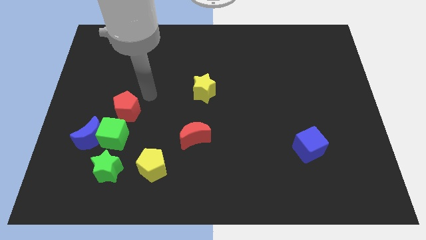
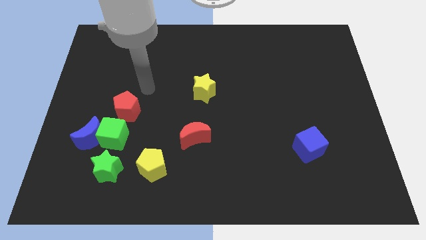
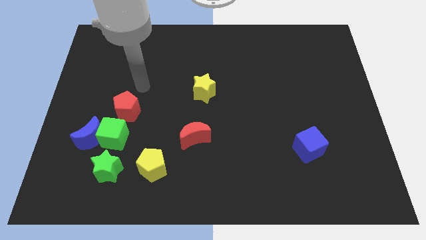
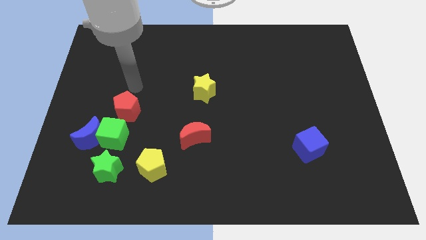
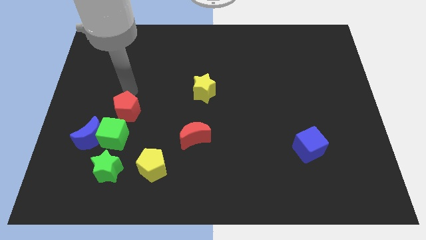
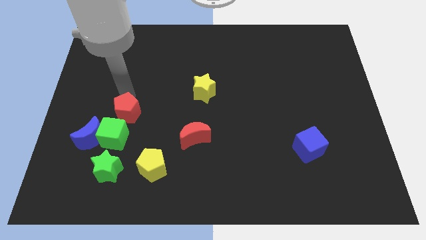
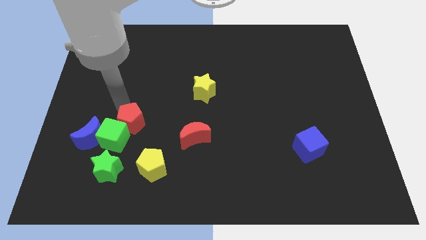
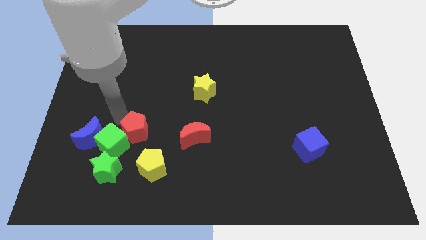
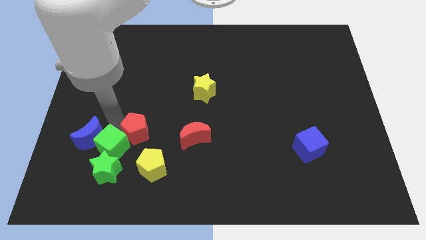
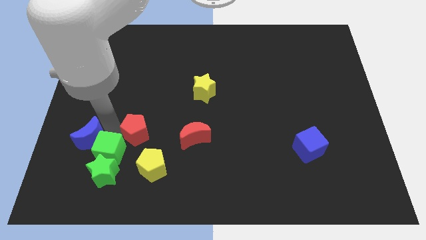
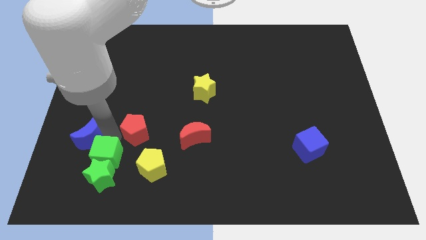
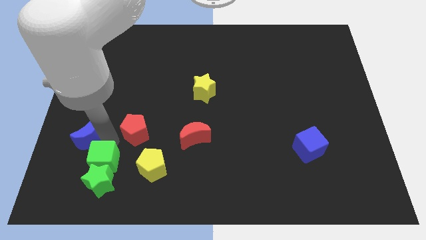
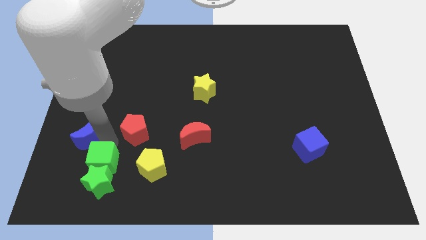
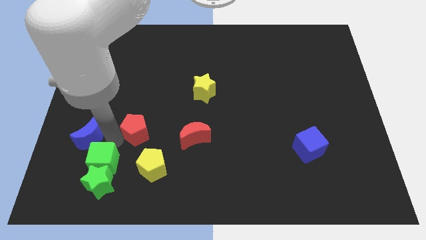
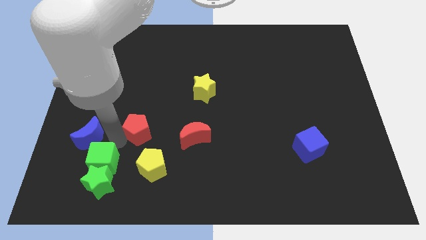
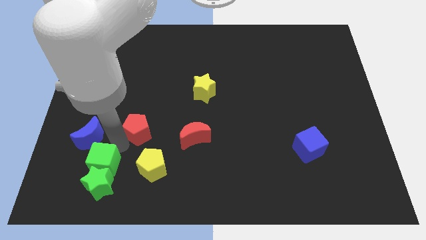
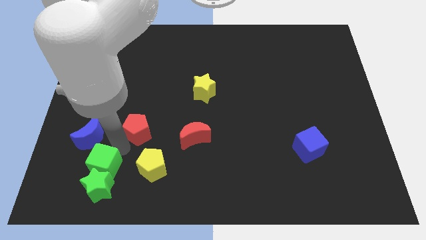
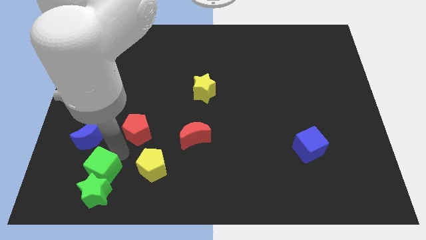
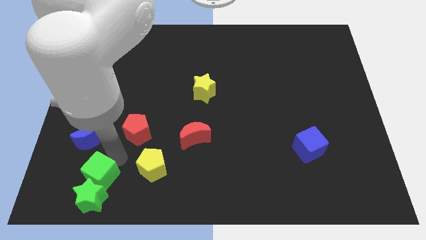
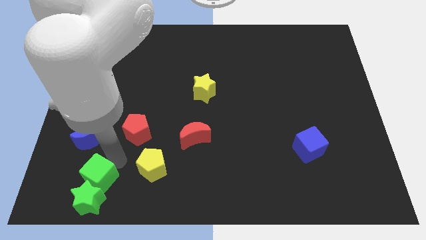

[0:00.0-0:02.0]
push the red pentagon and green blocks slightly downwards

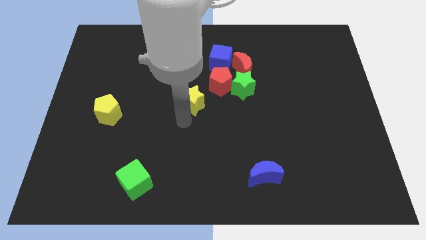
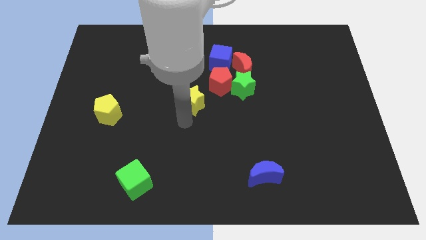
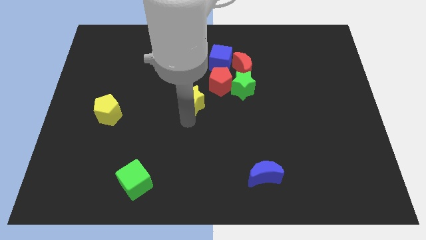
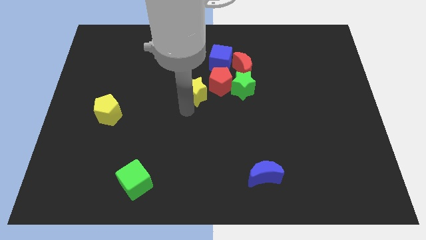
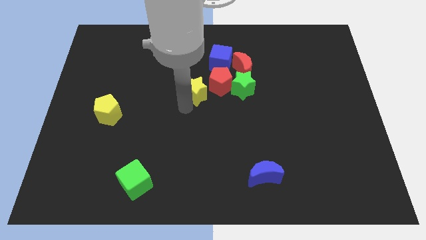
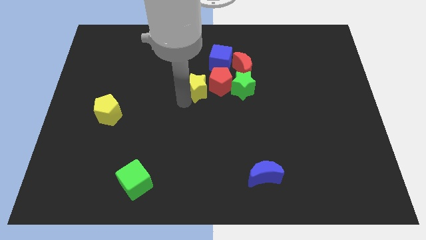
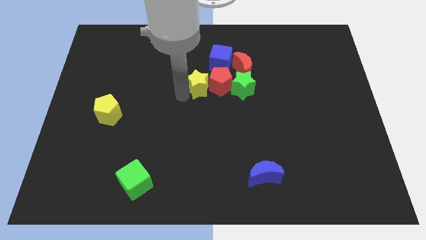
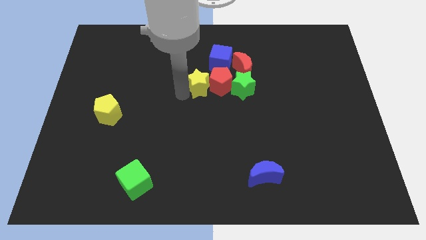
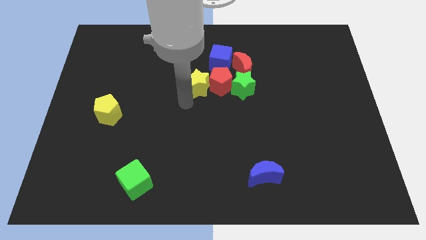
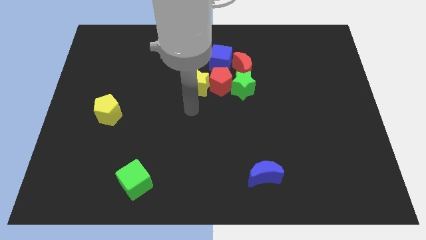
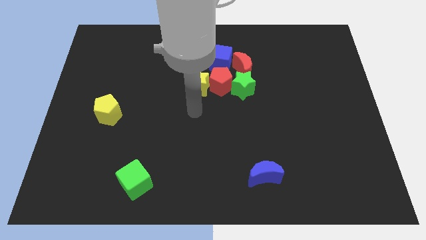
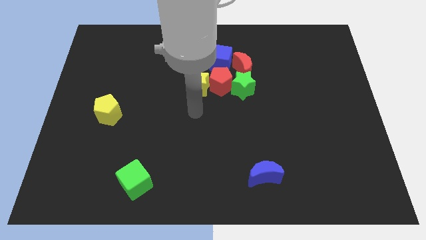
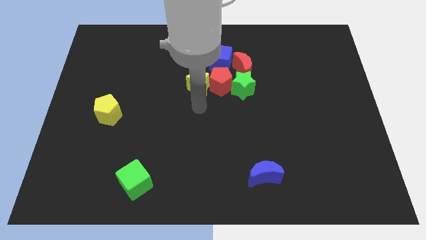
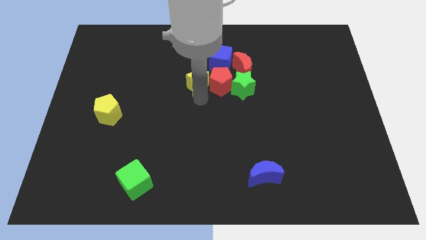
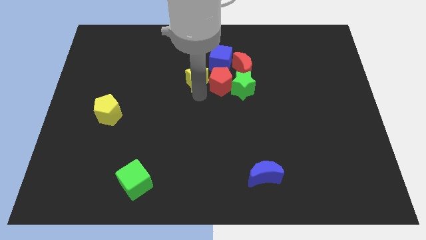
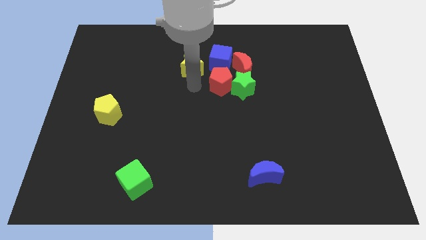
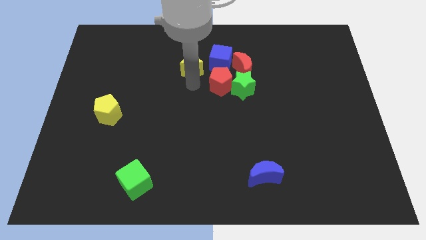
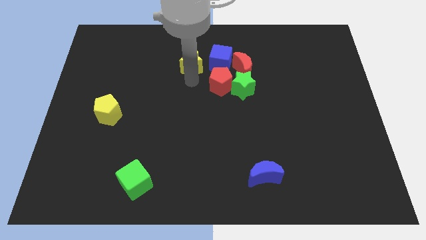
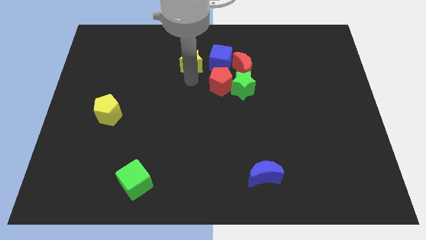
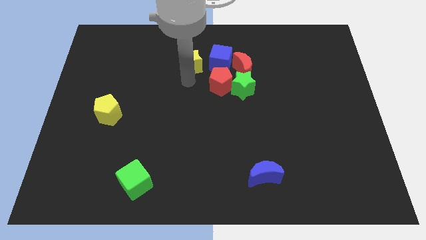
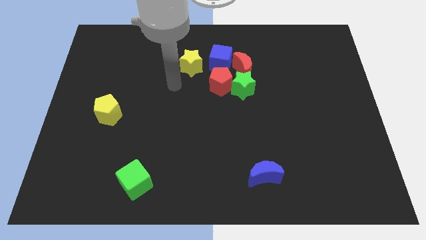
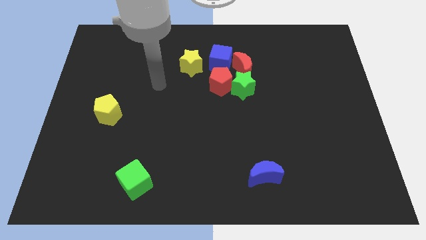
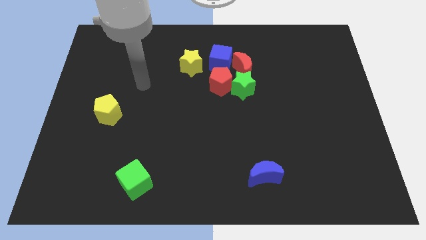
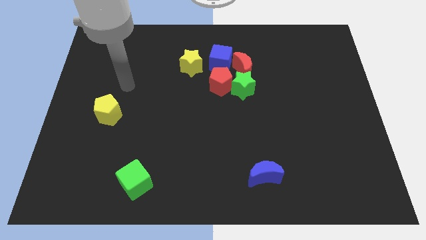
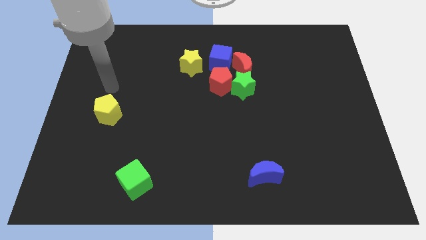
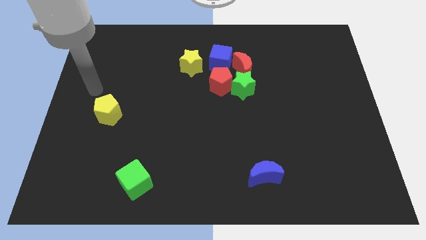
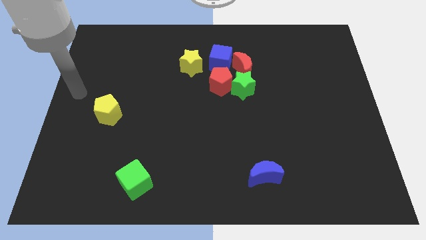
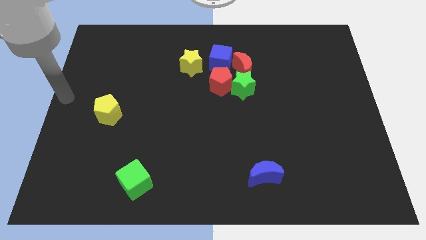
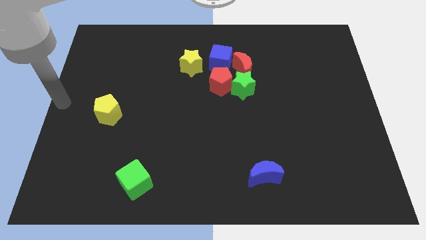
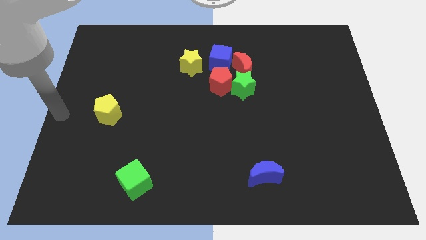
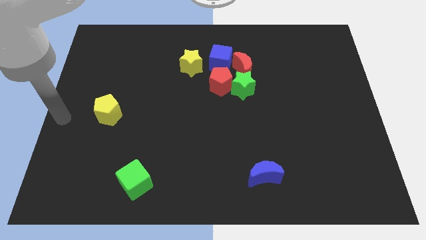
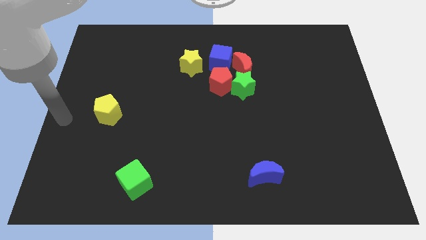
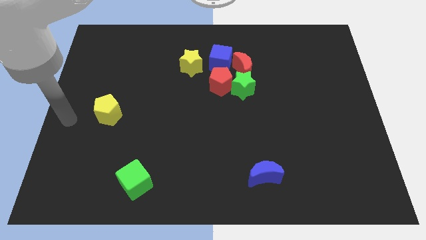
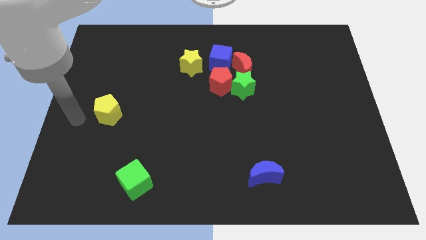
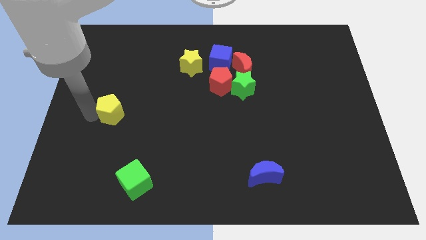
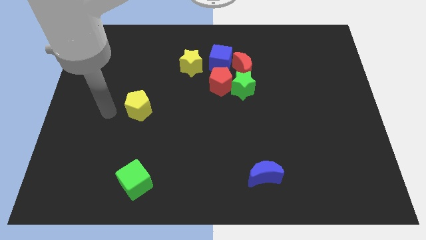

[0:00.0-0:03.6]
place your arm left to yellow pentagon

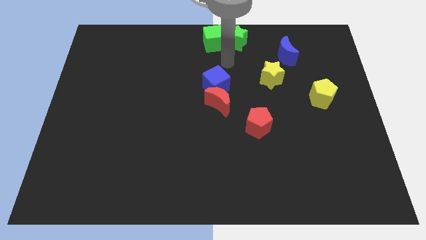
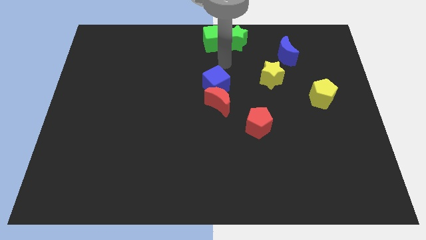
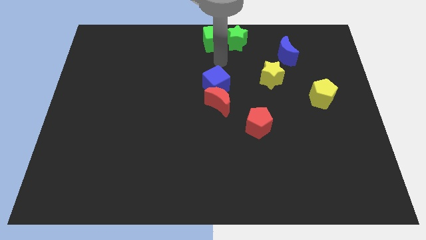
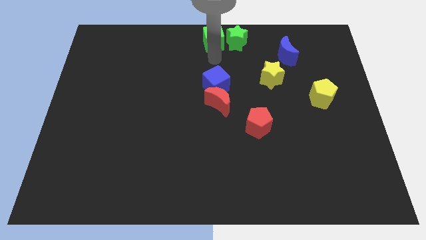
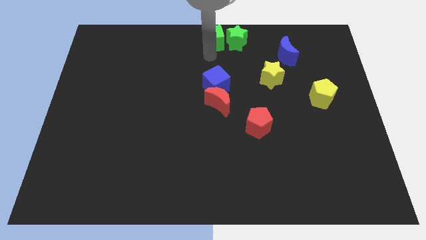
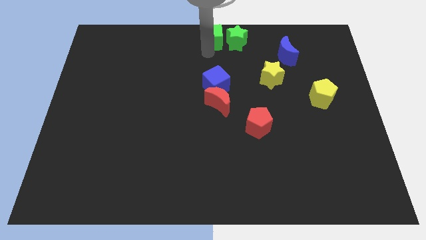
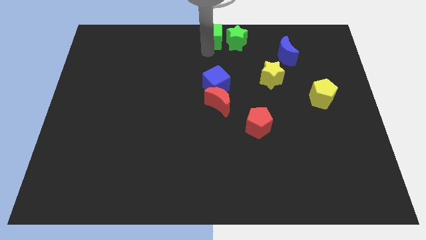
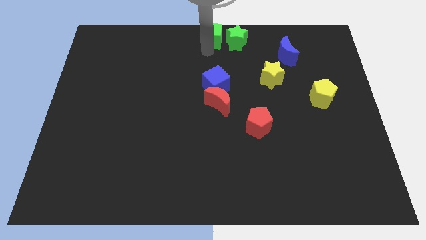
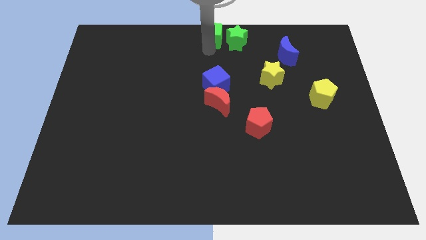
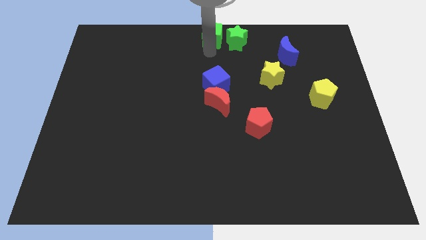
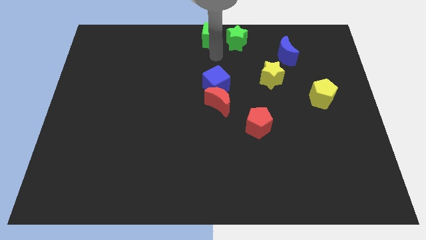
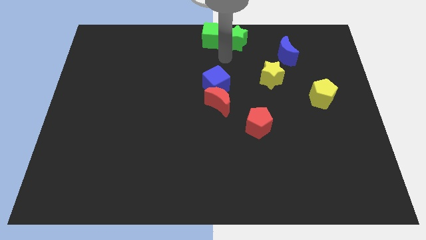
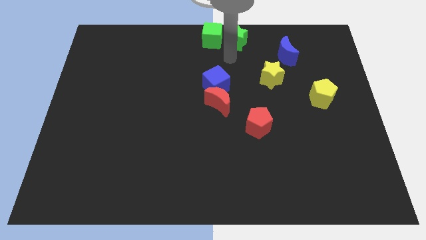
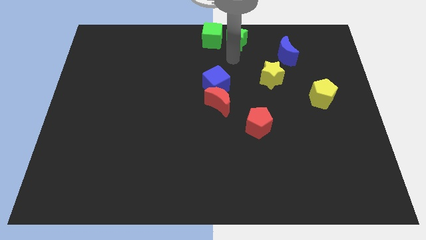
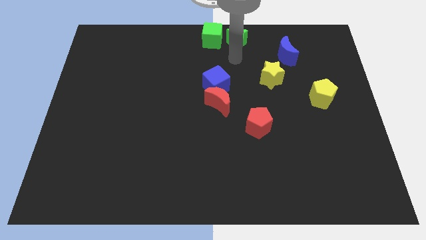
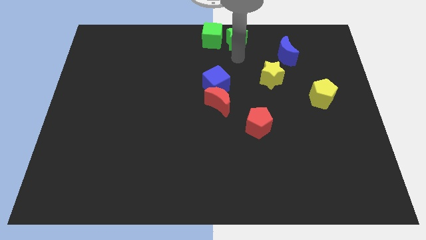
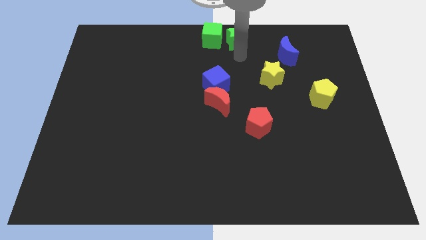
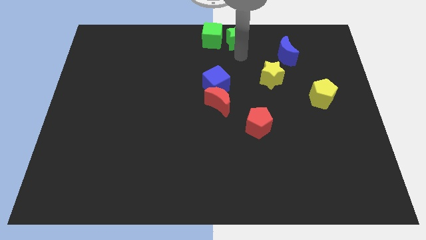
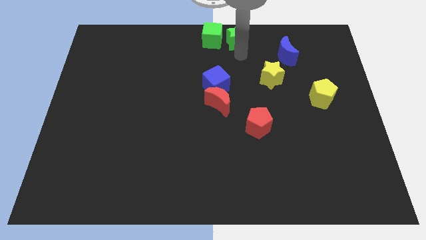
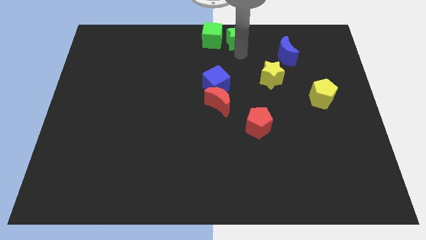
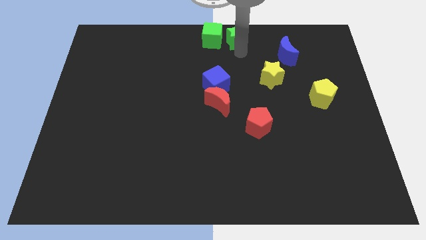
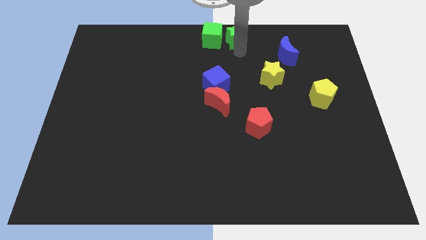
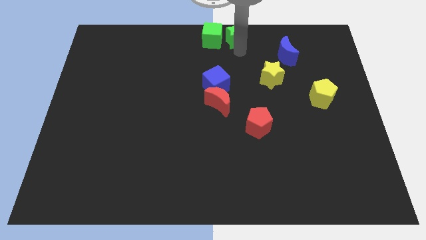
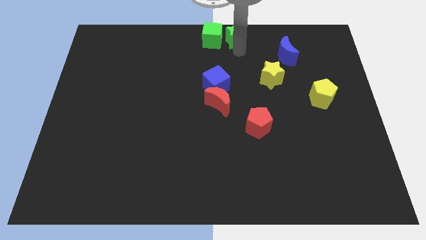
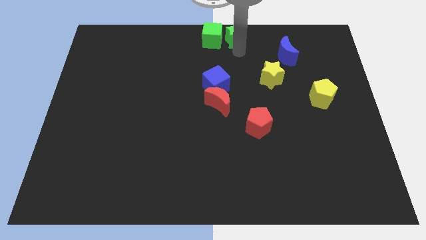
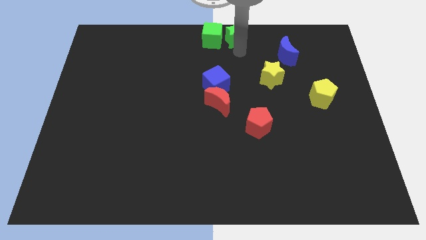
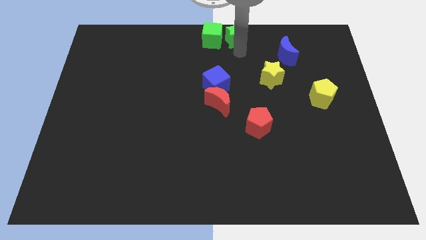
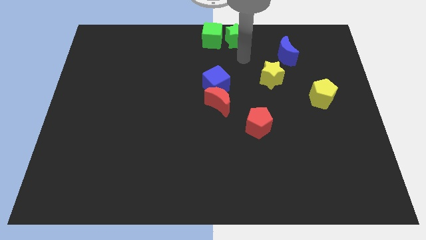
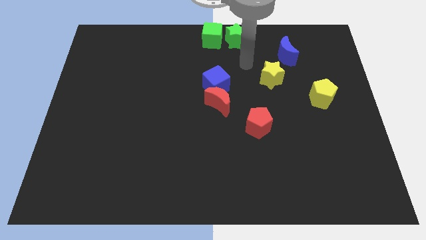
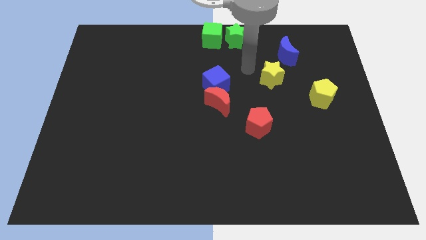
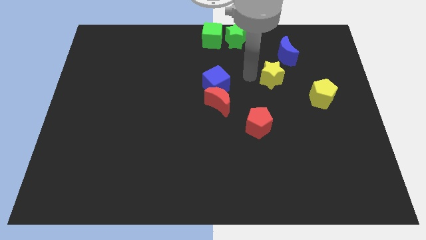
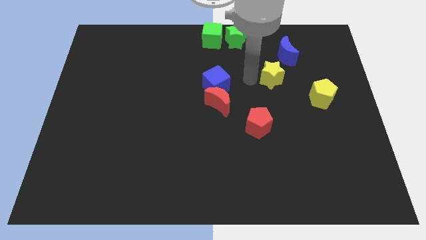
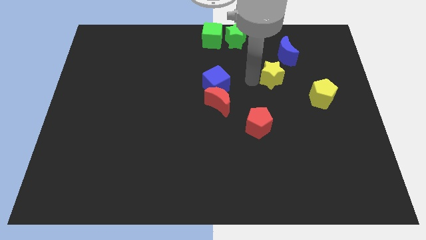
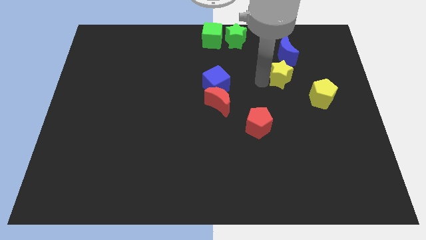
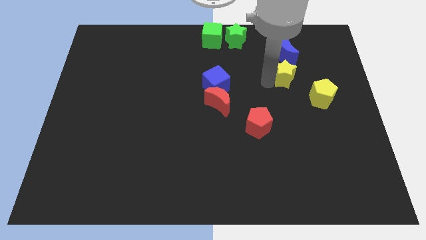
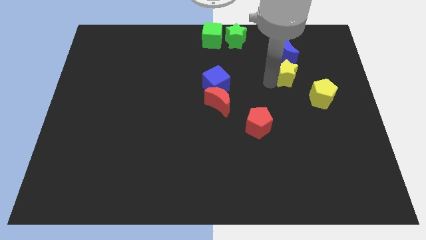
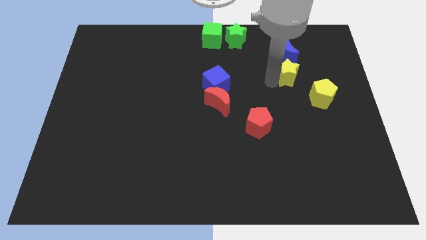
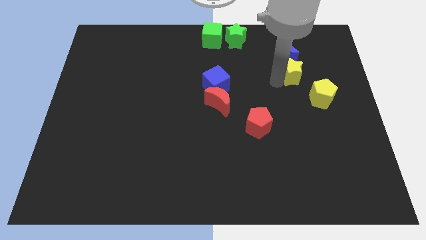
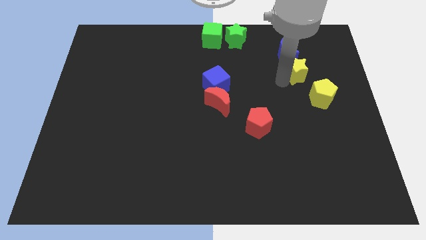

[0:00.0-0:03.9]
push yellow star below blue moon
